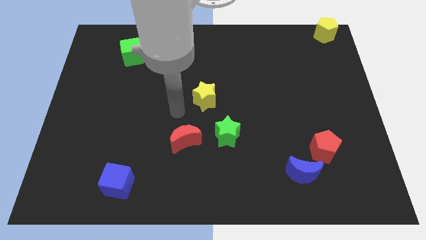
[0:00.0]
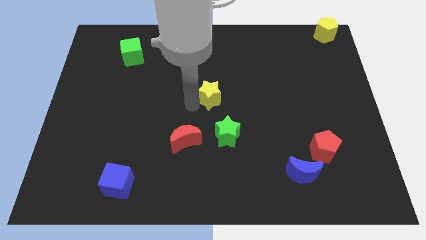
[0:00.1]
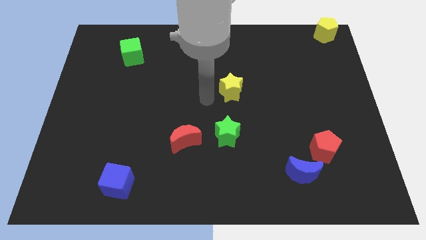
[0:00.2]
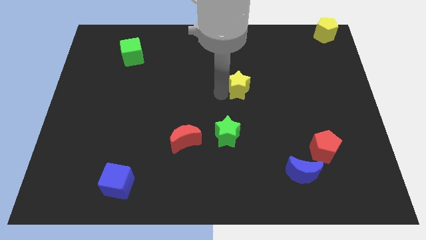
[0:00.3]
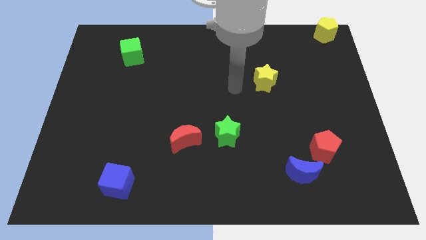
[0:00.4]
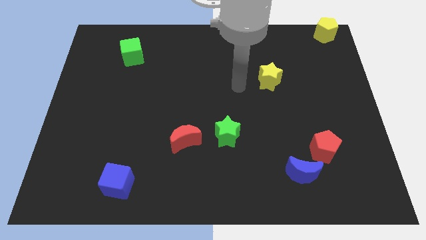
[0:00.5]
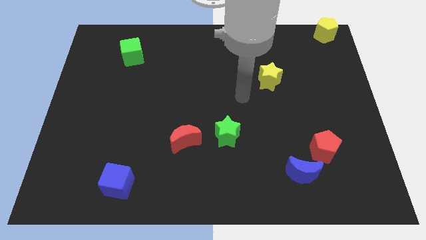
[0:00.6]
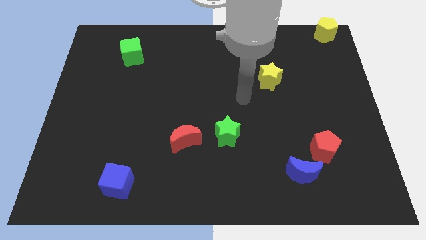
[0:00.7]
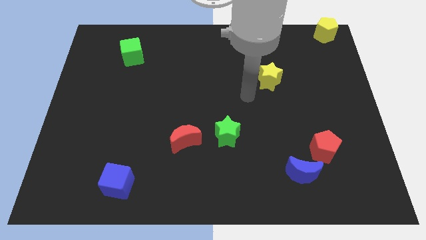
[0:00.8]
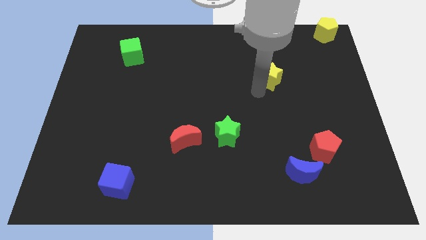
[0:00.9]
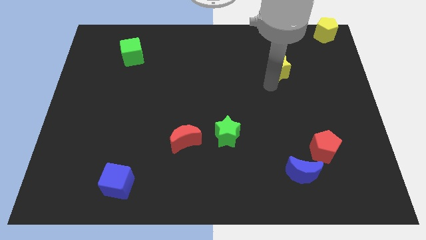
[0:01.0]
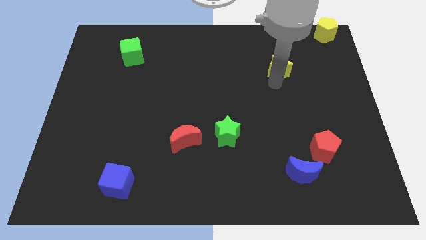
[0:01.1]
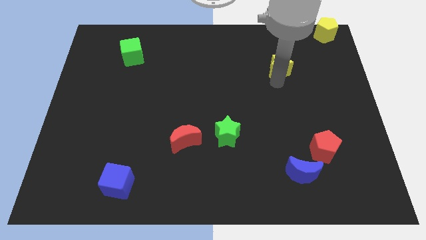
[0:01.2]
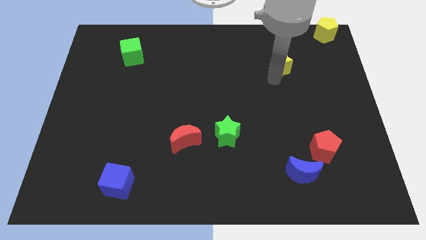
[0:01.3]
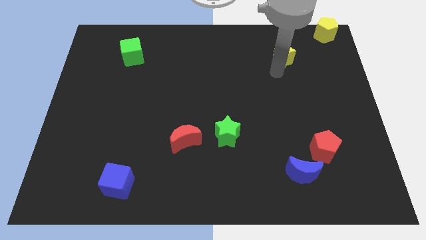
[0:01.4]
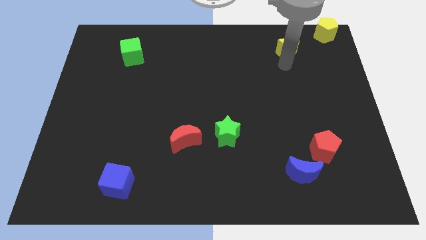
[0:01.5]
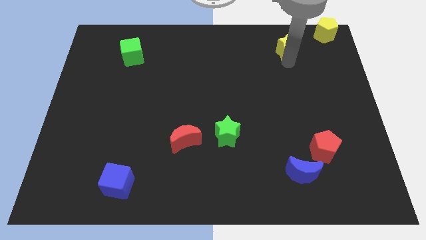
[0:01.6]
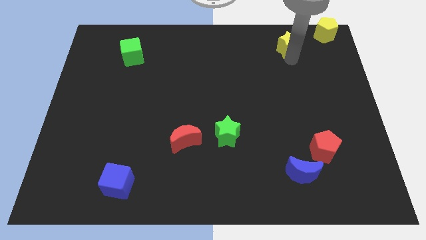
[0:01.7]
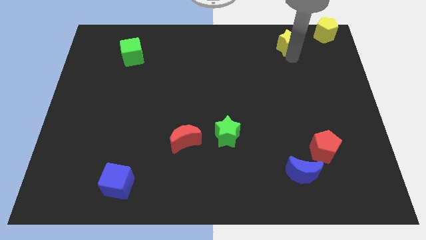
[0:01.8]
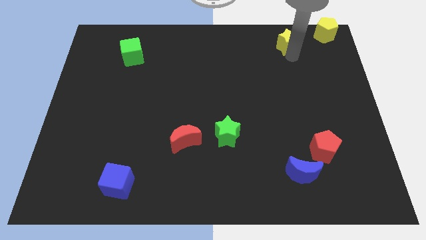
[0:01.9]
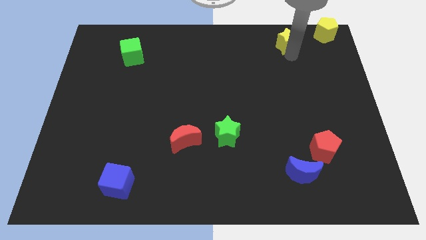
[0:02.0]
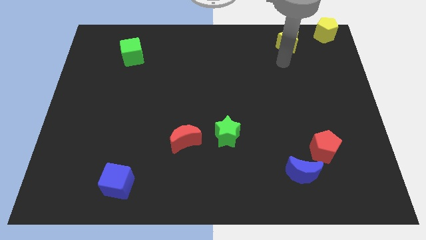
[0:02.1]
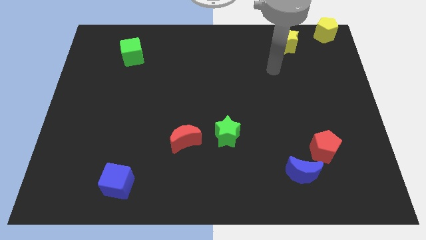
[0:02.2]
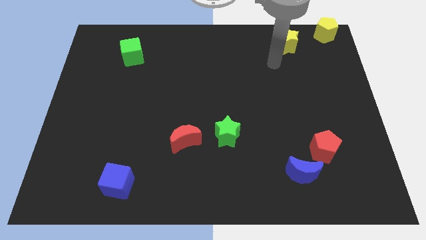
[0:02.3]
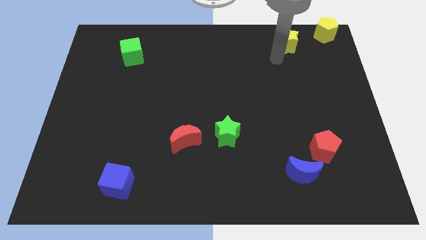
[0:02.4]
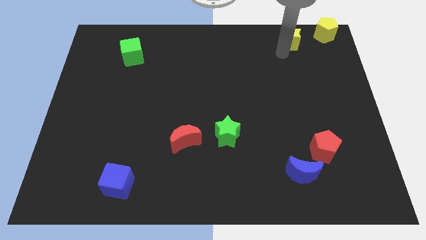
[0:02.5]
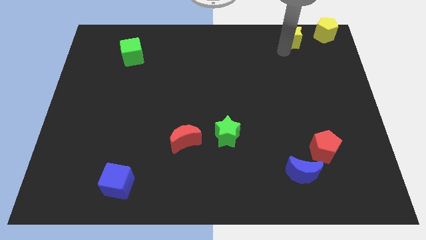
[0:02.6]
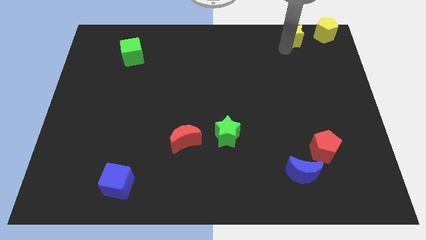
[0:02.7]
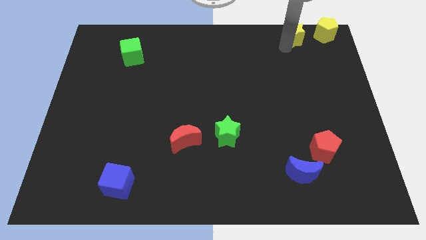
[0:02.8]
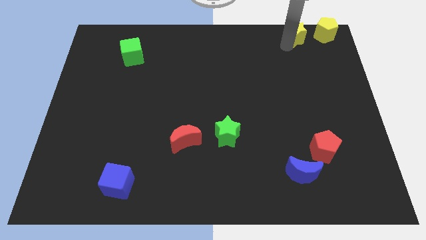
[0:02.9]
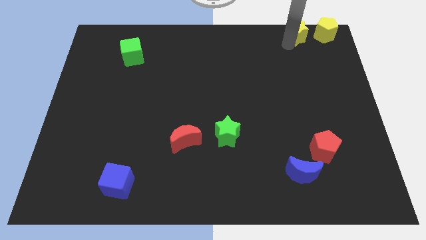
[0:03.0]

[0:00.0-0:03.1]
push the yellow star to the left of the yellow pentagon

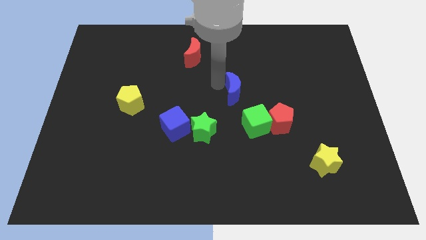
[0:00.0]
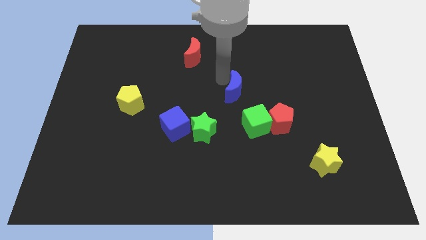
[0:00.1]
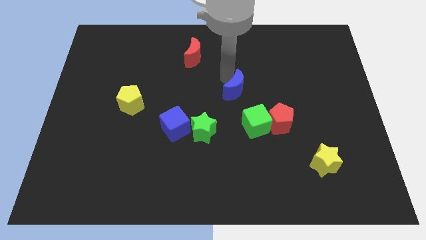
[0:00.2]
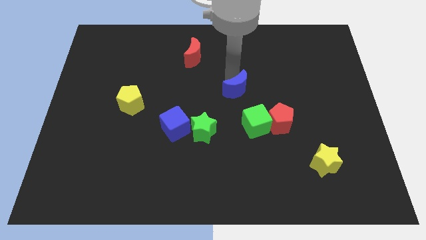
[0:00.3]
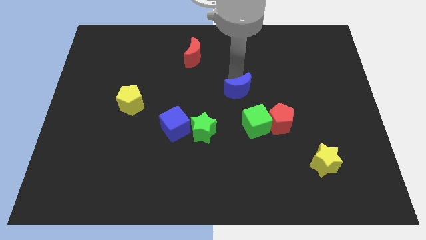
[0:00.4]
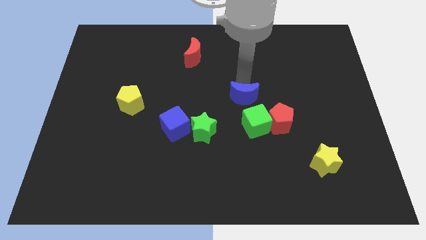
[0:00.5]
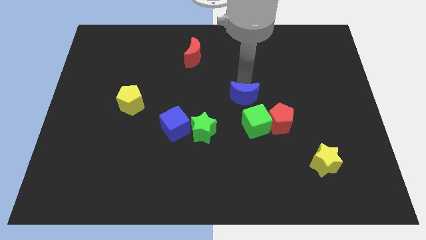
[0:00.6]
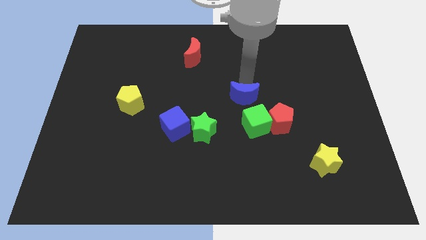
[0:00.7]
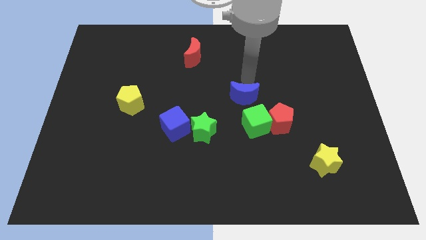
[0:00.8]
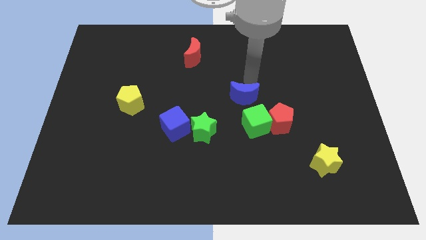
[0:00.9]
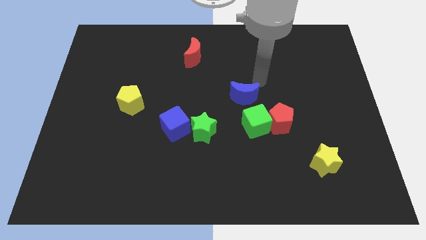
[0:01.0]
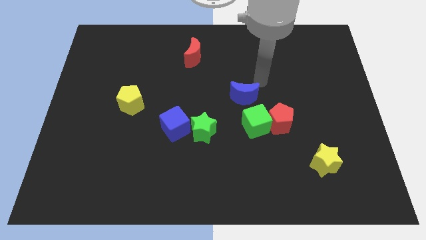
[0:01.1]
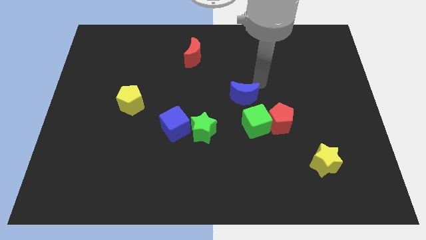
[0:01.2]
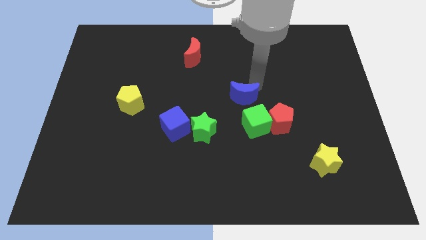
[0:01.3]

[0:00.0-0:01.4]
move the blue crescent slightly to the right

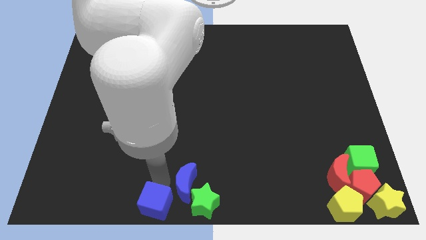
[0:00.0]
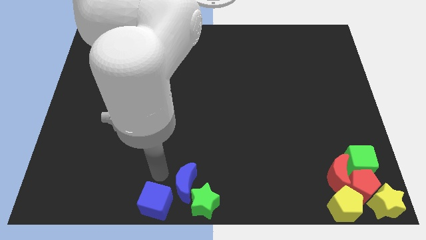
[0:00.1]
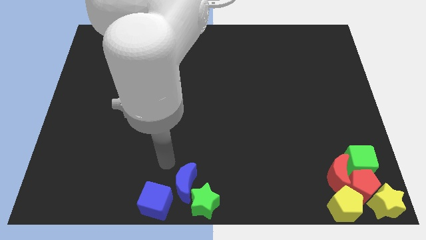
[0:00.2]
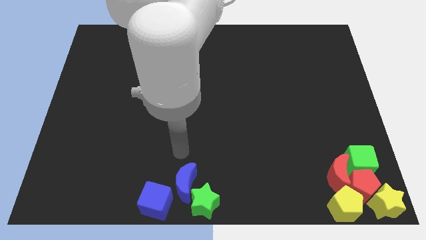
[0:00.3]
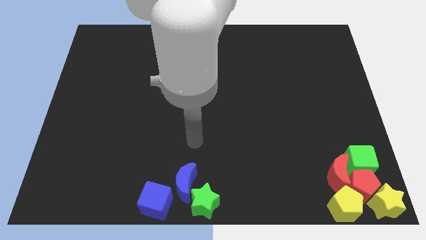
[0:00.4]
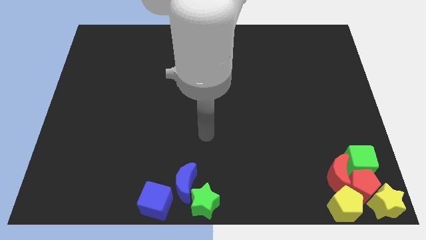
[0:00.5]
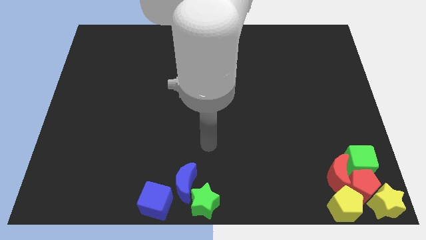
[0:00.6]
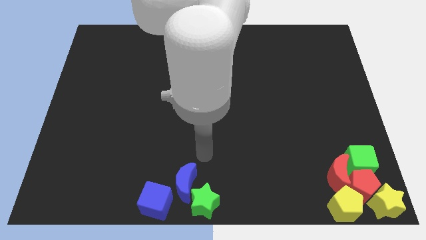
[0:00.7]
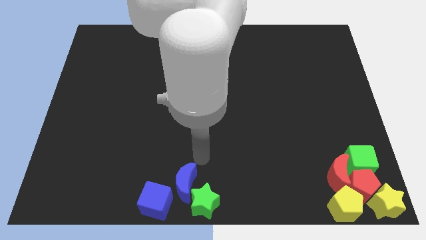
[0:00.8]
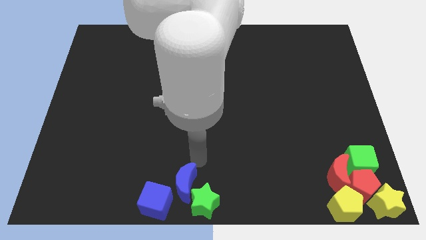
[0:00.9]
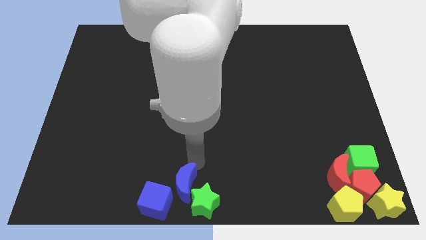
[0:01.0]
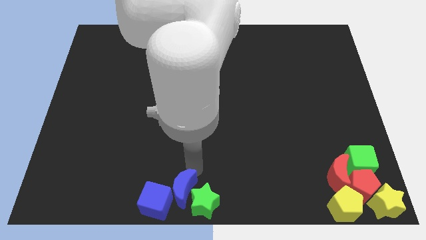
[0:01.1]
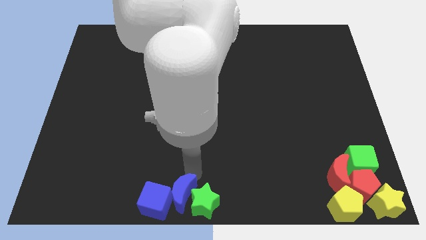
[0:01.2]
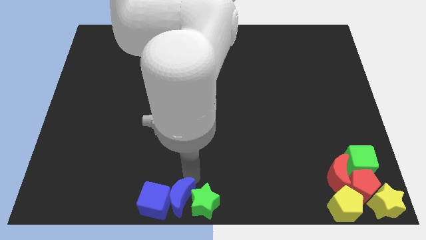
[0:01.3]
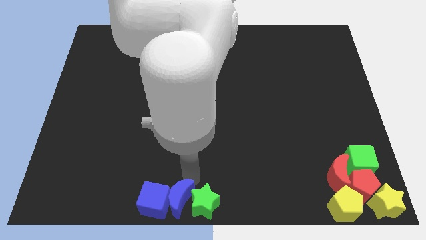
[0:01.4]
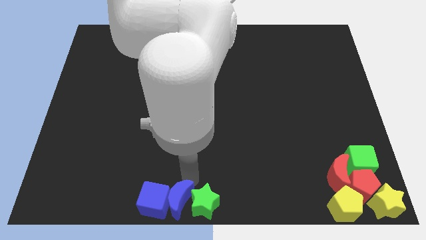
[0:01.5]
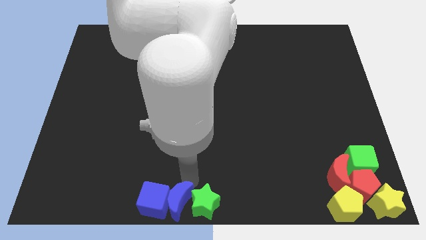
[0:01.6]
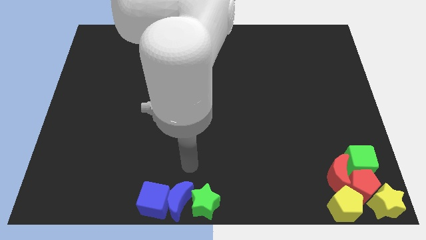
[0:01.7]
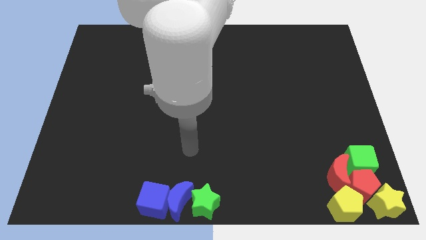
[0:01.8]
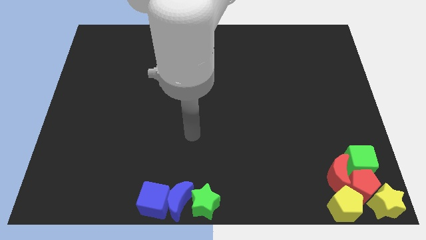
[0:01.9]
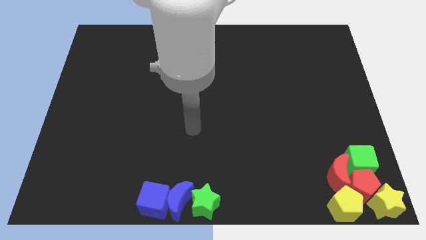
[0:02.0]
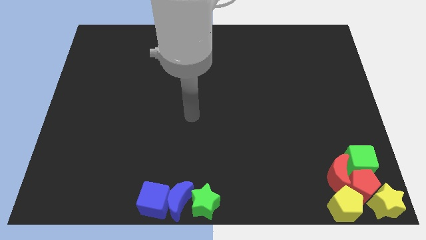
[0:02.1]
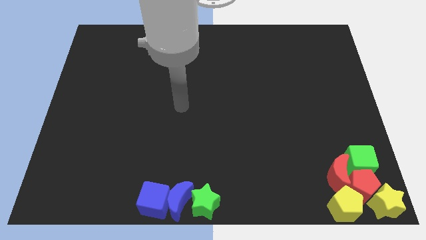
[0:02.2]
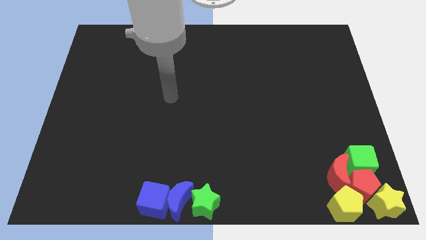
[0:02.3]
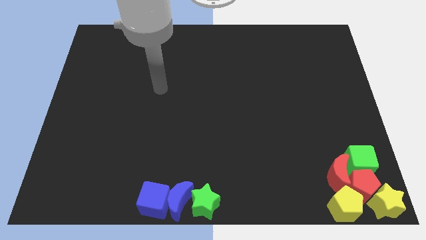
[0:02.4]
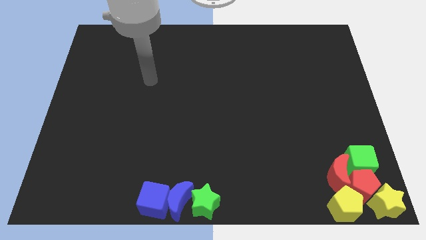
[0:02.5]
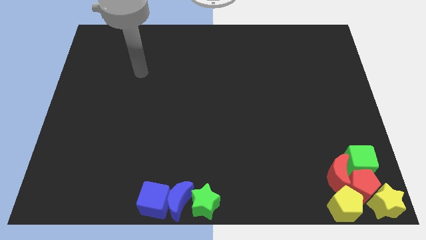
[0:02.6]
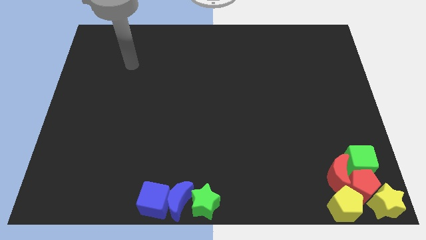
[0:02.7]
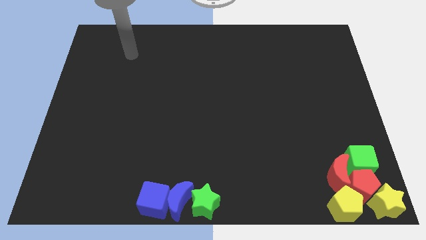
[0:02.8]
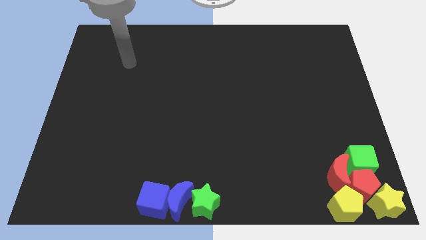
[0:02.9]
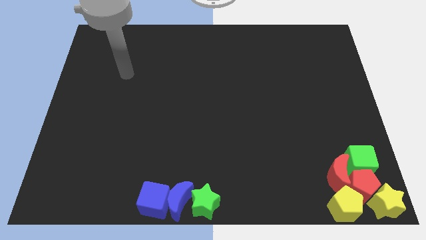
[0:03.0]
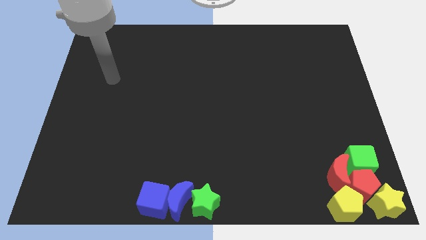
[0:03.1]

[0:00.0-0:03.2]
place the blue moon in between the green star and the blue cube

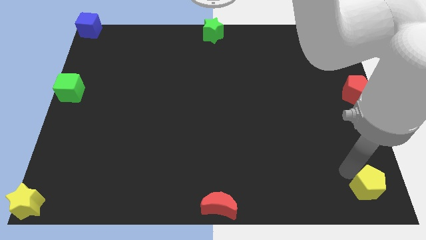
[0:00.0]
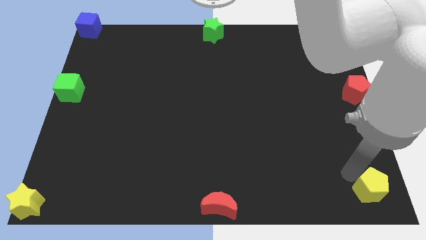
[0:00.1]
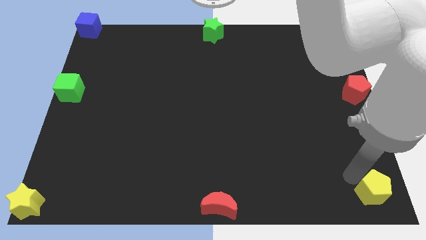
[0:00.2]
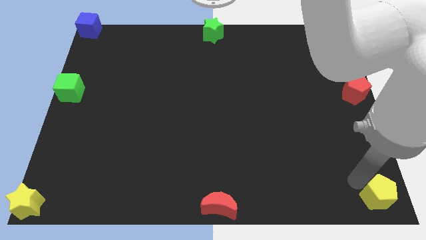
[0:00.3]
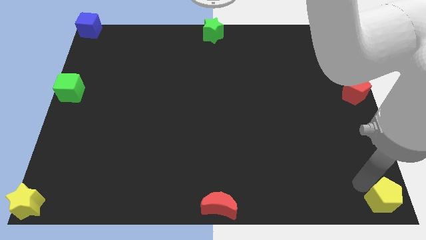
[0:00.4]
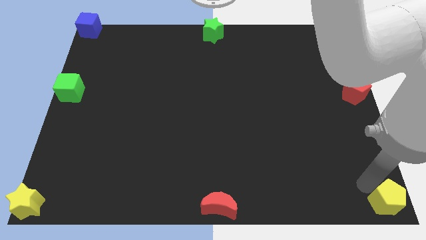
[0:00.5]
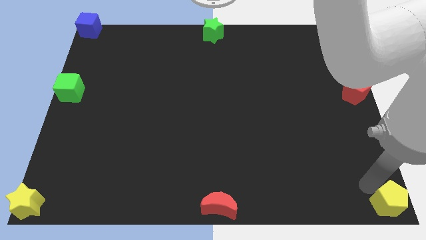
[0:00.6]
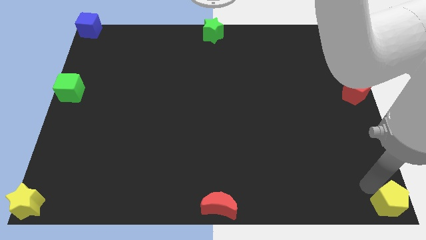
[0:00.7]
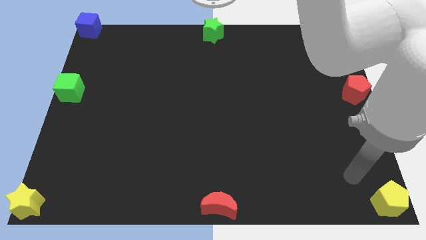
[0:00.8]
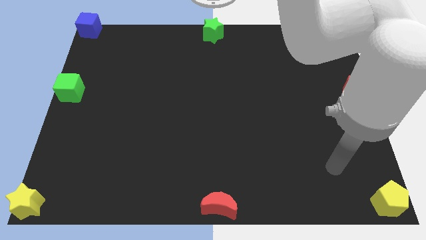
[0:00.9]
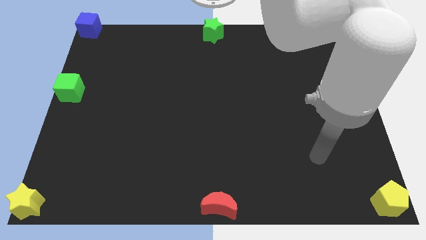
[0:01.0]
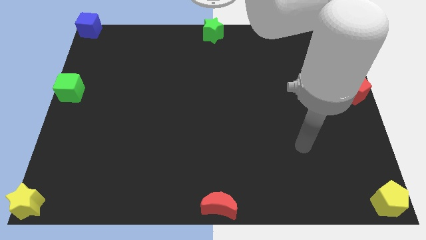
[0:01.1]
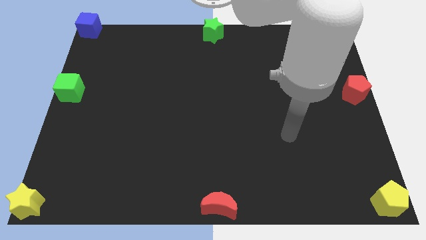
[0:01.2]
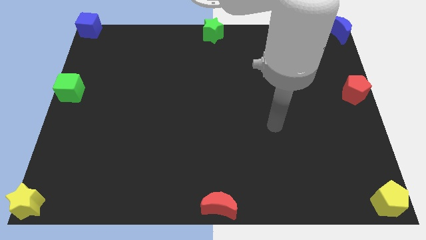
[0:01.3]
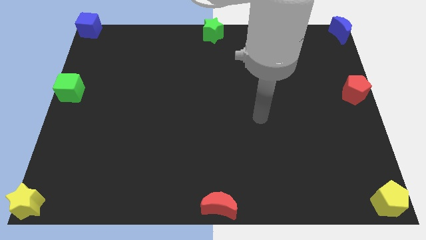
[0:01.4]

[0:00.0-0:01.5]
move the yellow pentagon to the bottom right corner of the board
